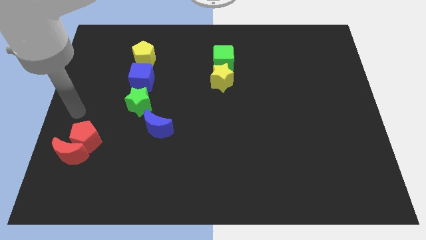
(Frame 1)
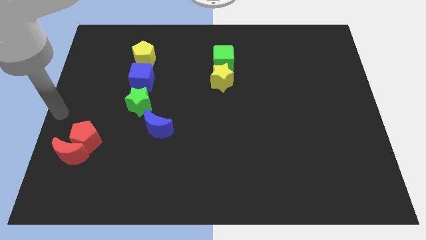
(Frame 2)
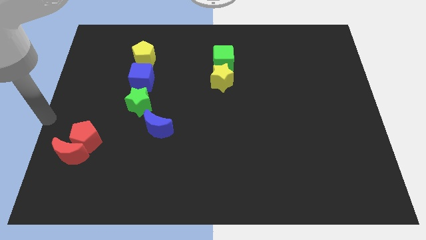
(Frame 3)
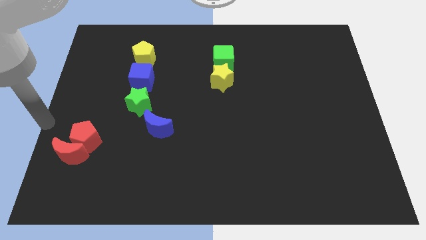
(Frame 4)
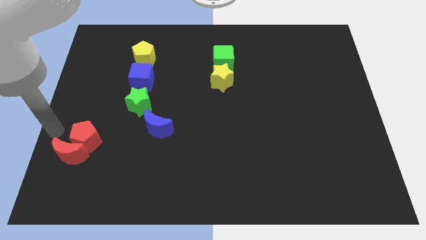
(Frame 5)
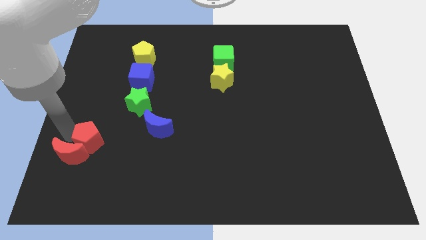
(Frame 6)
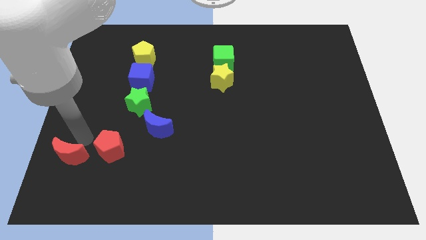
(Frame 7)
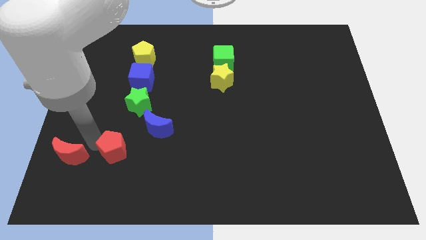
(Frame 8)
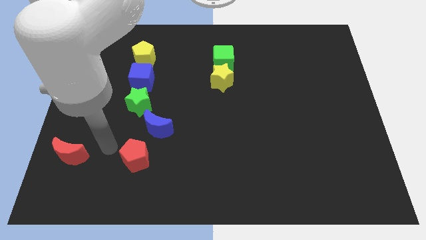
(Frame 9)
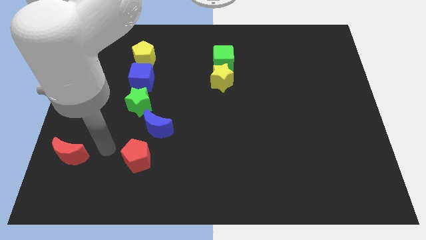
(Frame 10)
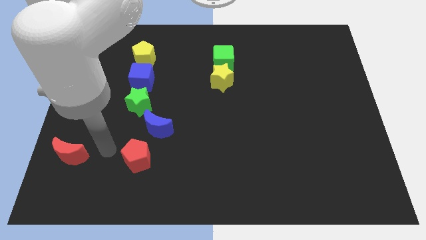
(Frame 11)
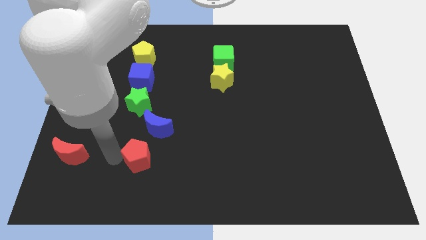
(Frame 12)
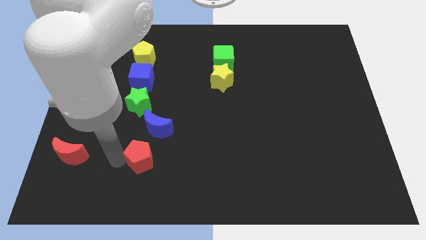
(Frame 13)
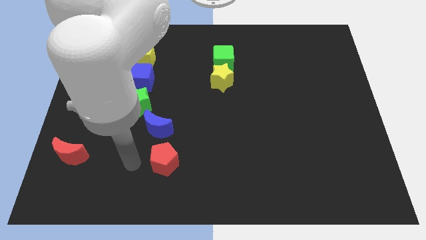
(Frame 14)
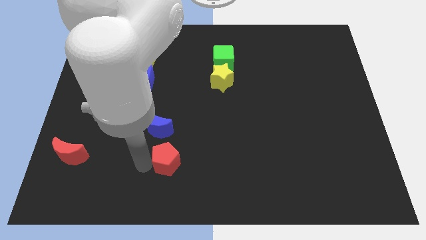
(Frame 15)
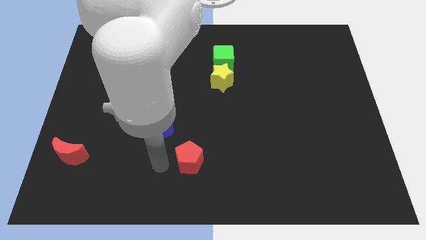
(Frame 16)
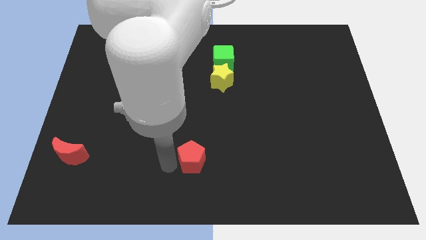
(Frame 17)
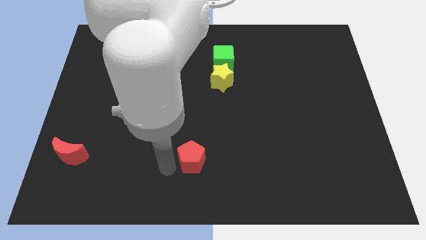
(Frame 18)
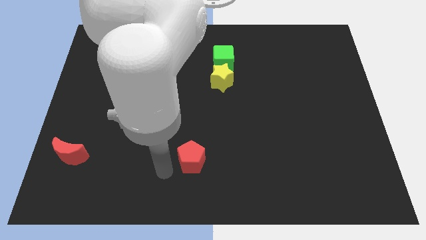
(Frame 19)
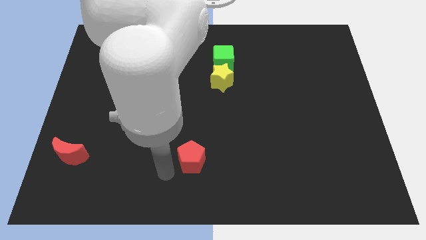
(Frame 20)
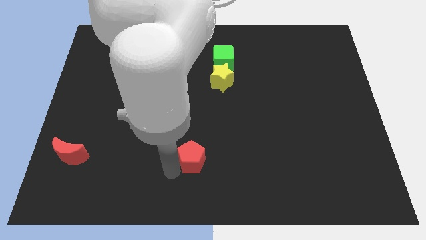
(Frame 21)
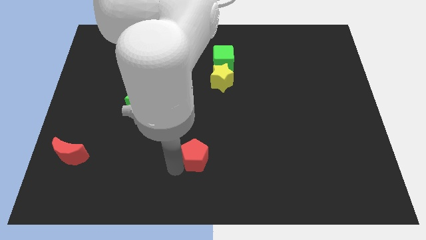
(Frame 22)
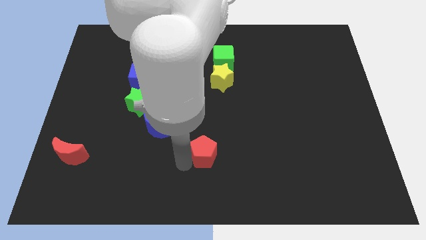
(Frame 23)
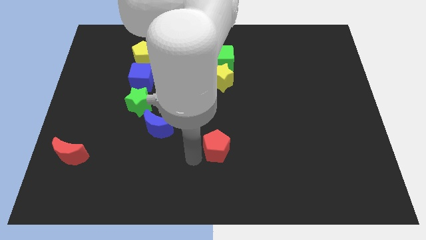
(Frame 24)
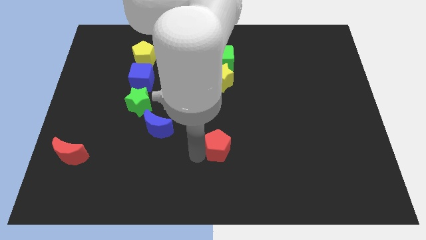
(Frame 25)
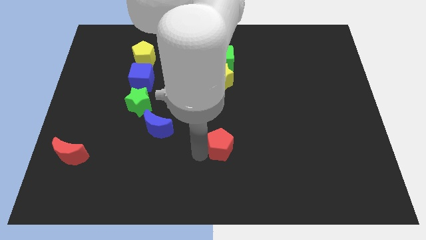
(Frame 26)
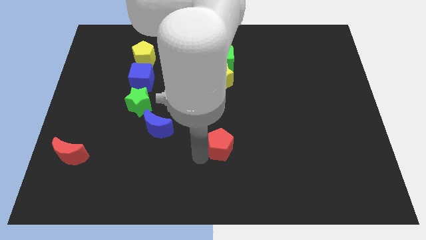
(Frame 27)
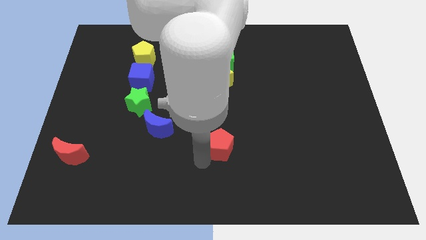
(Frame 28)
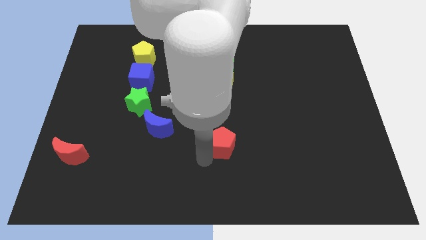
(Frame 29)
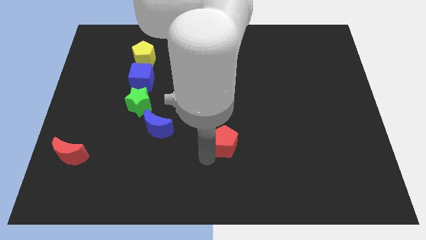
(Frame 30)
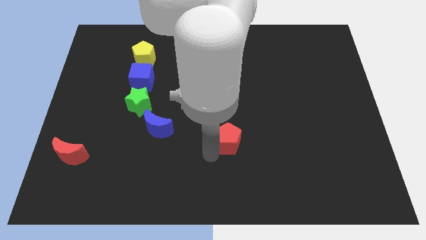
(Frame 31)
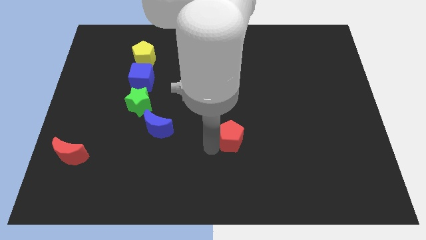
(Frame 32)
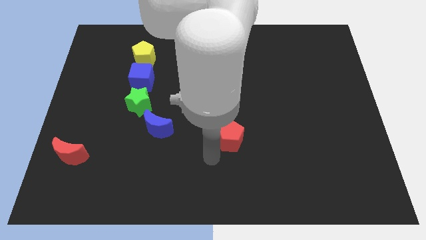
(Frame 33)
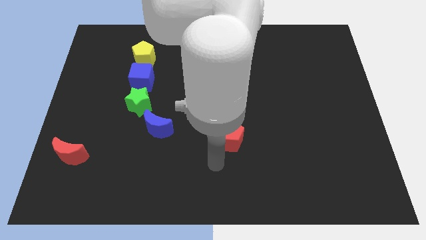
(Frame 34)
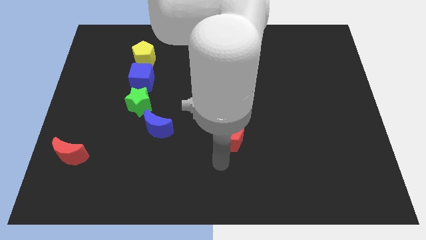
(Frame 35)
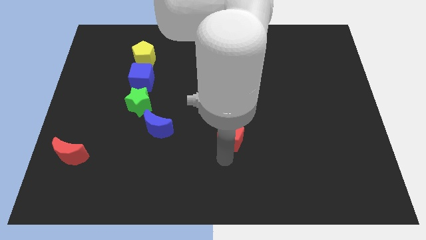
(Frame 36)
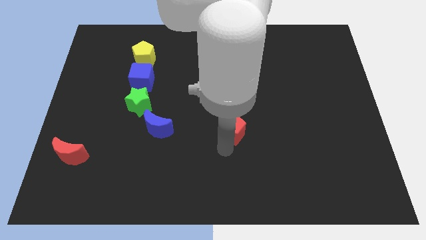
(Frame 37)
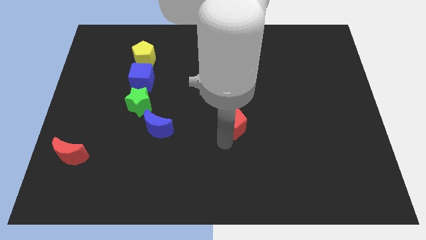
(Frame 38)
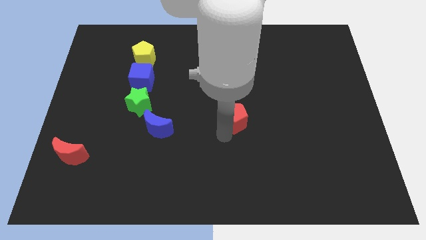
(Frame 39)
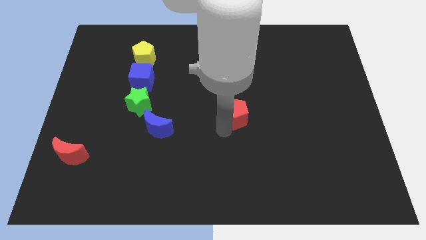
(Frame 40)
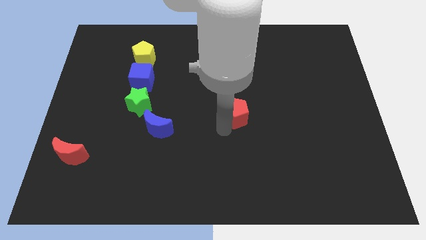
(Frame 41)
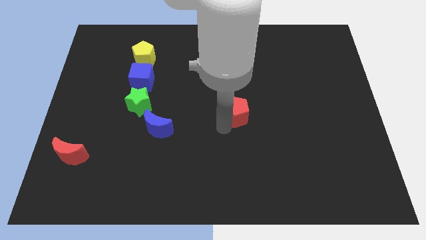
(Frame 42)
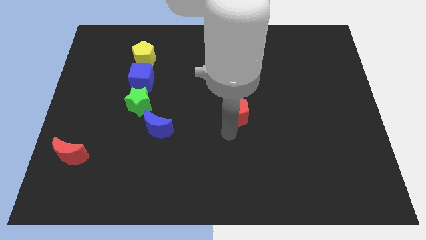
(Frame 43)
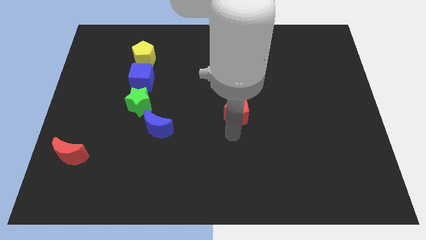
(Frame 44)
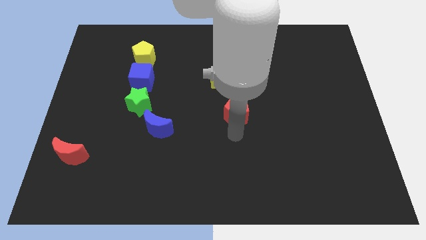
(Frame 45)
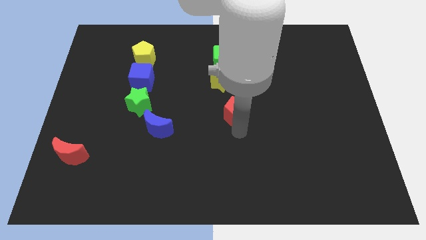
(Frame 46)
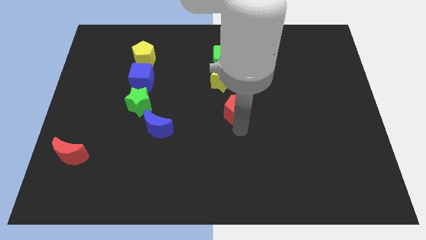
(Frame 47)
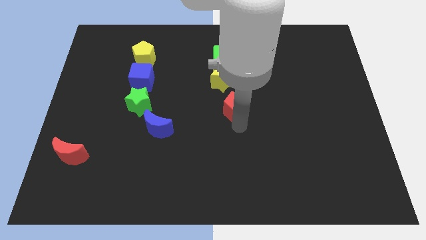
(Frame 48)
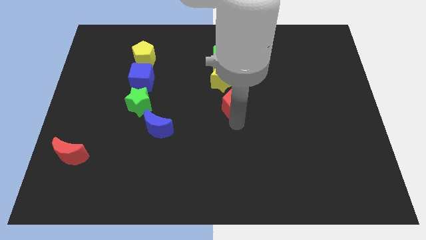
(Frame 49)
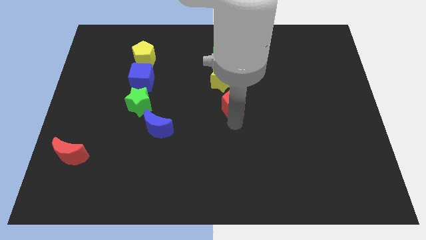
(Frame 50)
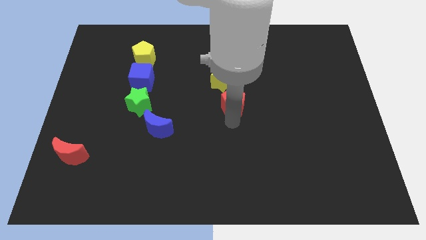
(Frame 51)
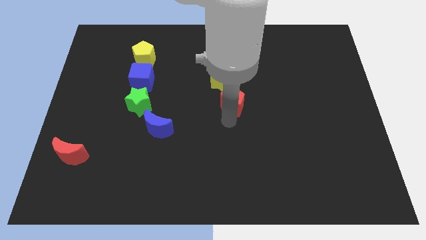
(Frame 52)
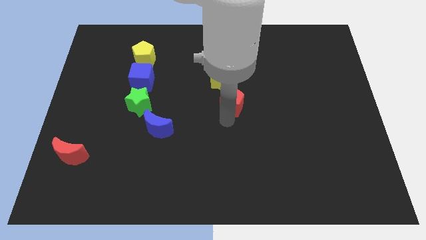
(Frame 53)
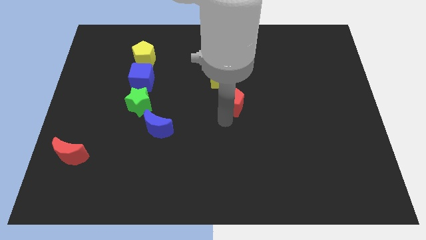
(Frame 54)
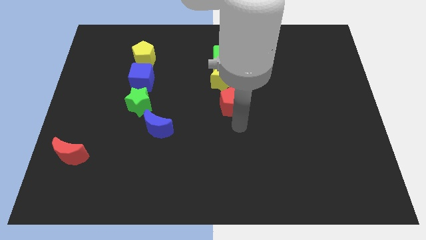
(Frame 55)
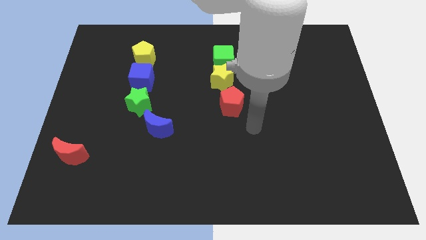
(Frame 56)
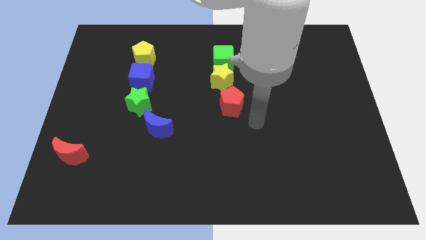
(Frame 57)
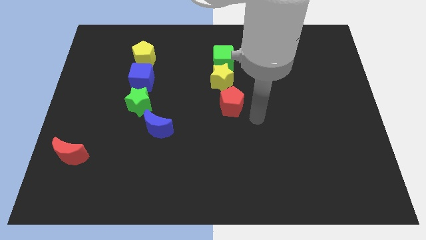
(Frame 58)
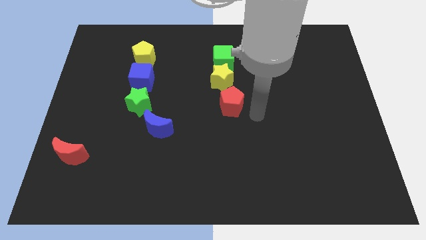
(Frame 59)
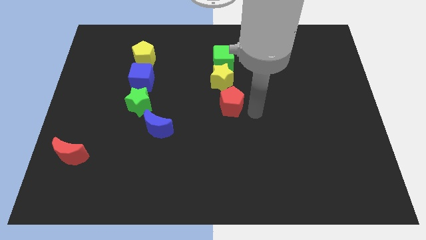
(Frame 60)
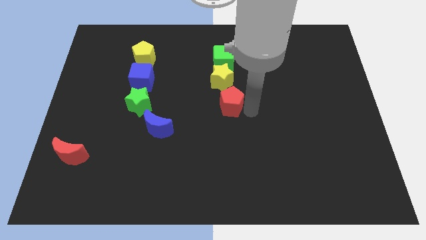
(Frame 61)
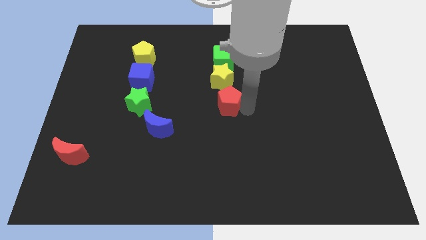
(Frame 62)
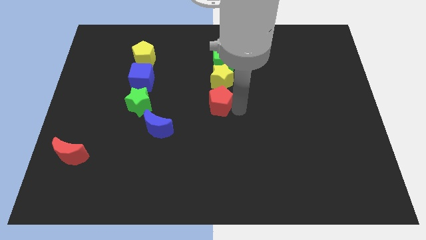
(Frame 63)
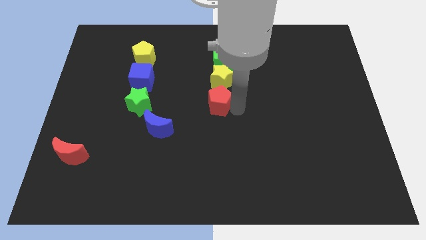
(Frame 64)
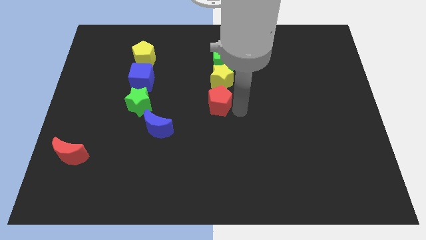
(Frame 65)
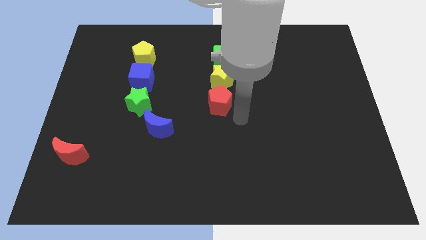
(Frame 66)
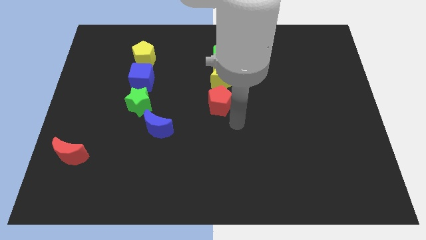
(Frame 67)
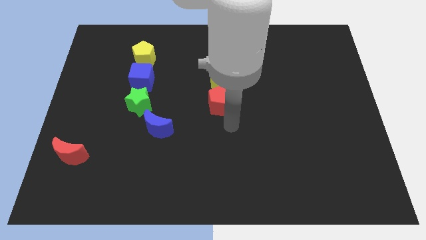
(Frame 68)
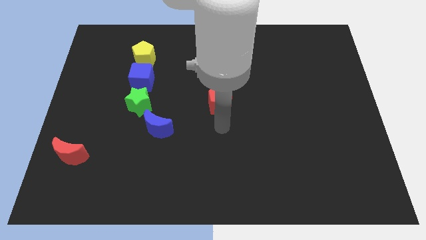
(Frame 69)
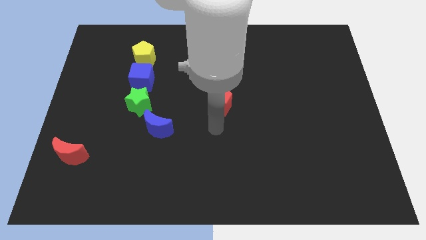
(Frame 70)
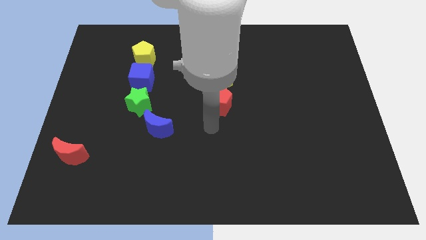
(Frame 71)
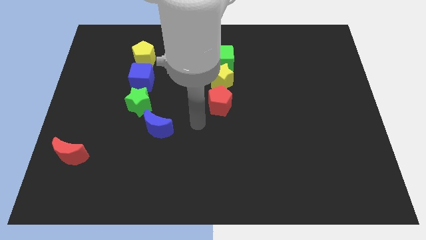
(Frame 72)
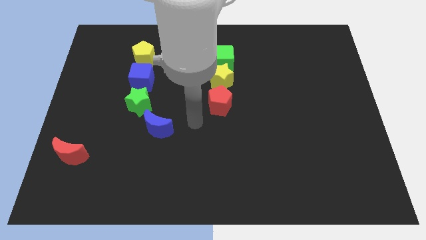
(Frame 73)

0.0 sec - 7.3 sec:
make the red pentagon to touch the bottom of the yellow star

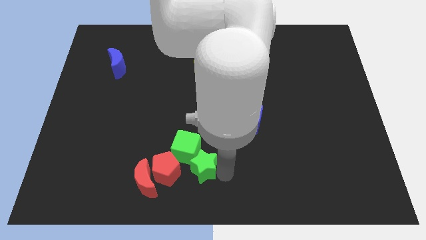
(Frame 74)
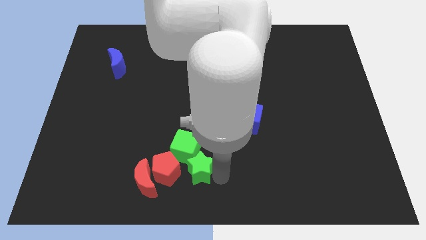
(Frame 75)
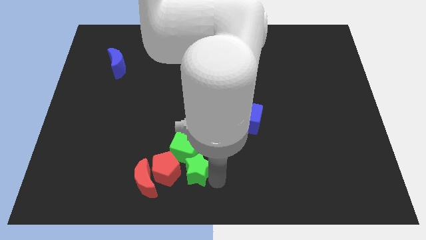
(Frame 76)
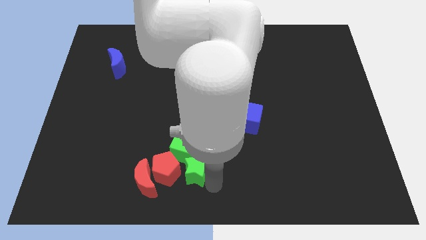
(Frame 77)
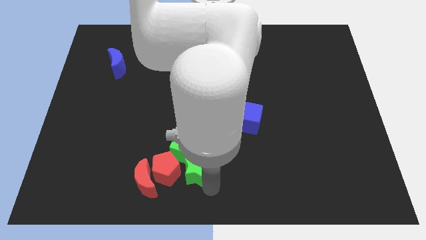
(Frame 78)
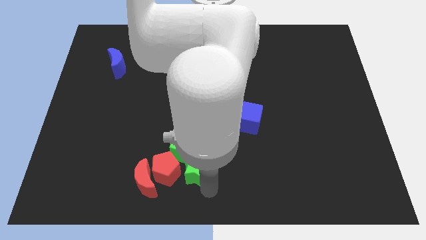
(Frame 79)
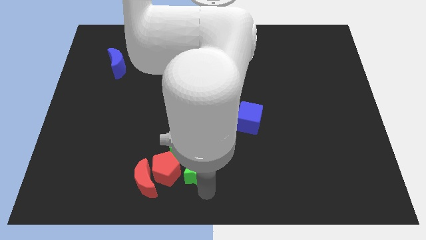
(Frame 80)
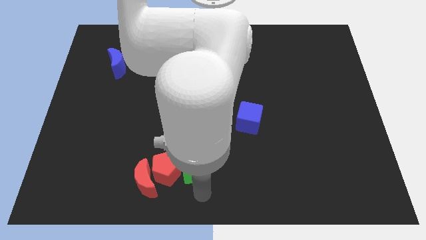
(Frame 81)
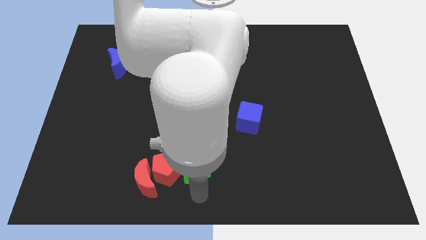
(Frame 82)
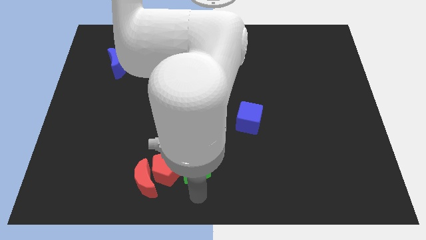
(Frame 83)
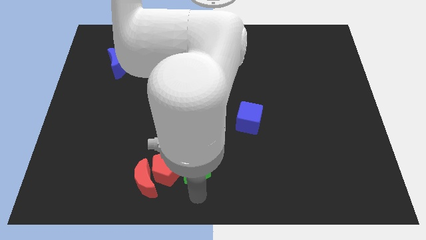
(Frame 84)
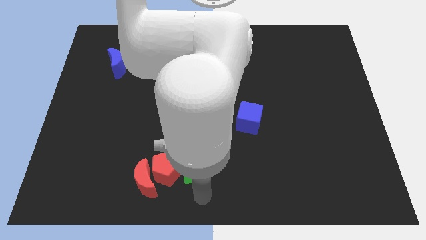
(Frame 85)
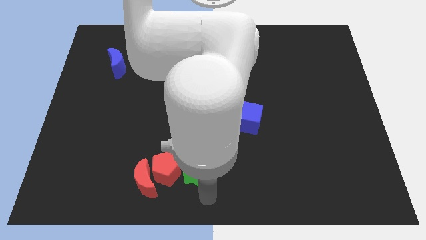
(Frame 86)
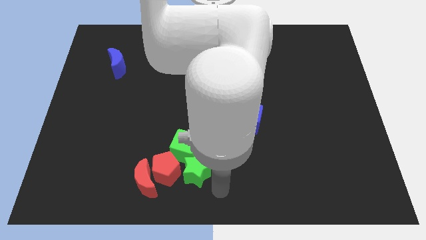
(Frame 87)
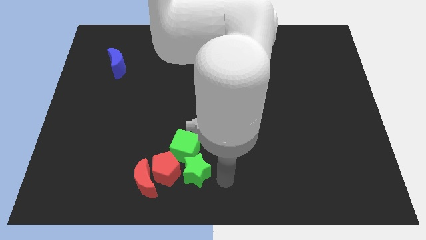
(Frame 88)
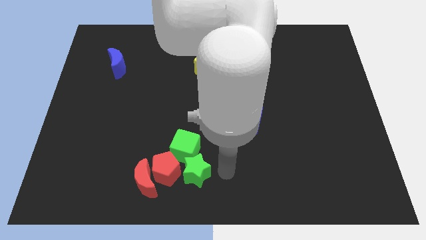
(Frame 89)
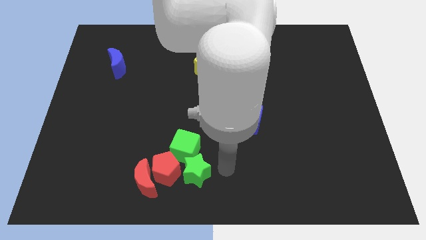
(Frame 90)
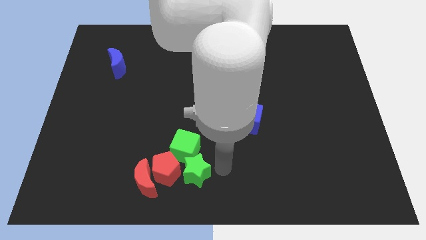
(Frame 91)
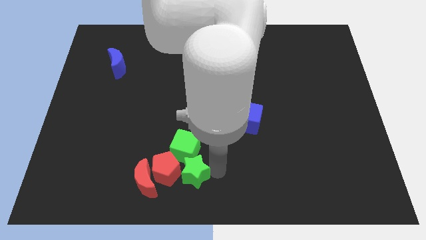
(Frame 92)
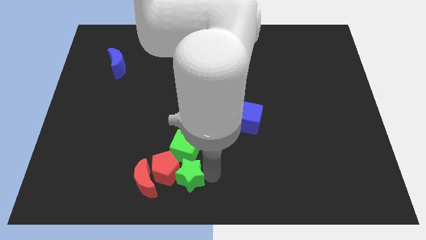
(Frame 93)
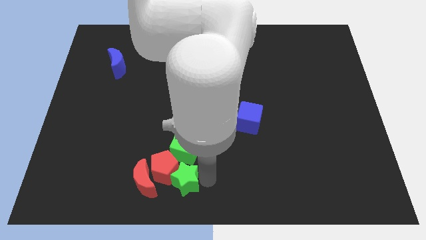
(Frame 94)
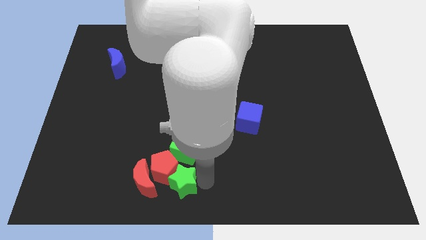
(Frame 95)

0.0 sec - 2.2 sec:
put the green star to the bottom right of the red pentagon
